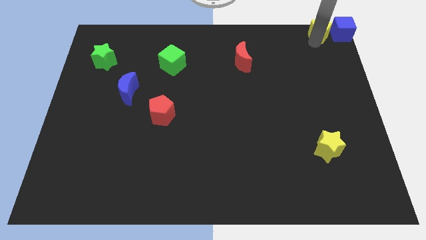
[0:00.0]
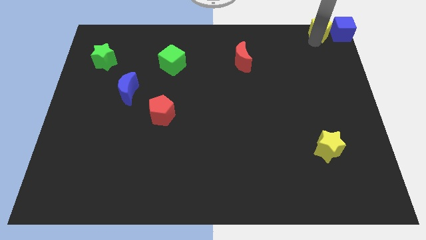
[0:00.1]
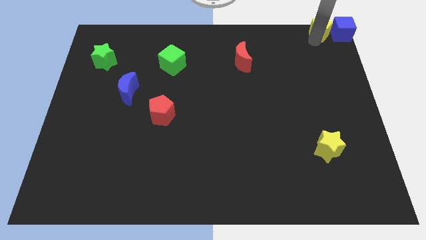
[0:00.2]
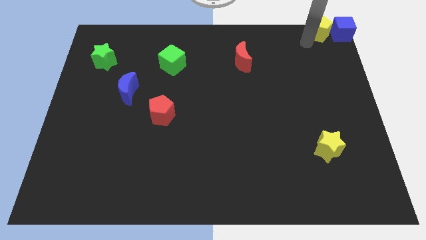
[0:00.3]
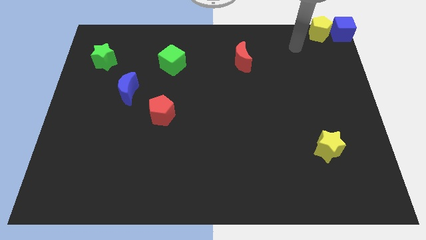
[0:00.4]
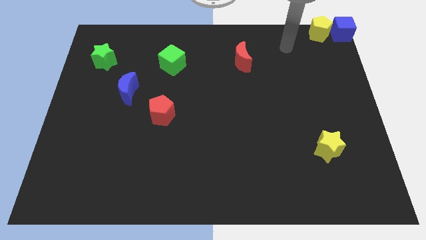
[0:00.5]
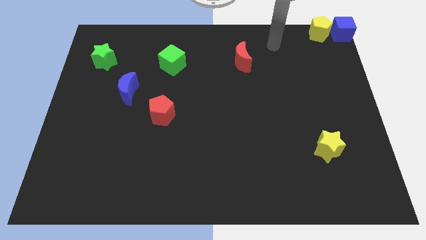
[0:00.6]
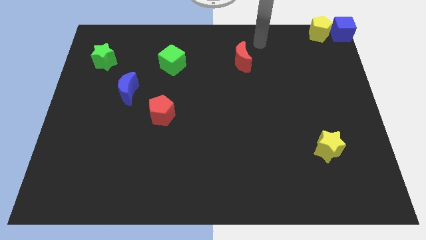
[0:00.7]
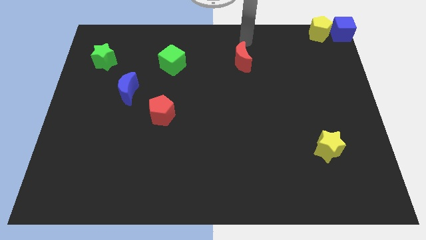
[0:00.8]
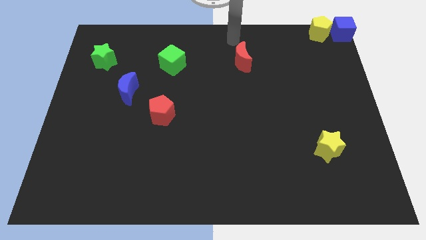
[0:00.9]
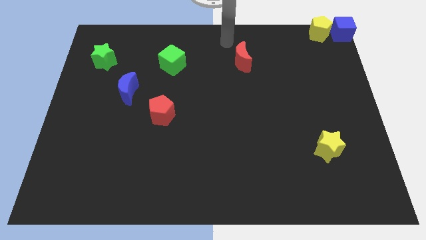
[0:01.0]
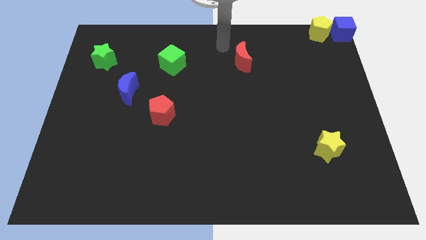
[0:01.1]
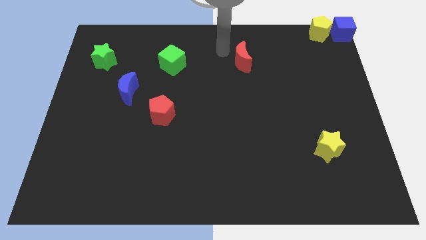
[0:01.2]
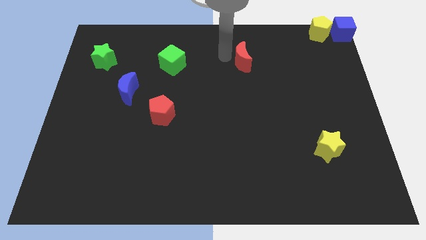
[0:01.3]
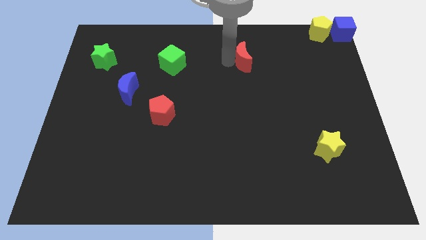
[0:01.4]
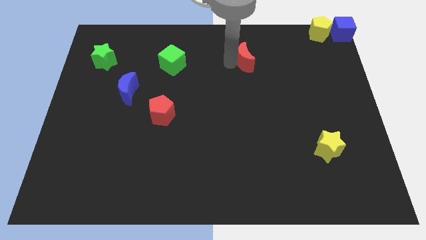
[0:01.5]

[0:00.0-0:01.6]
move your hand towards the red crescent

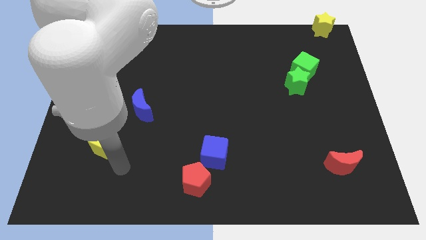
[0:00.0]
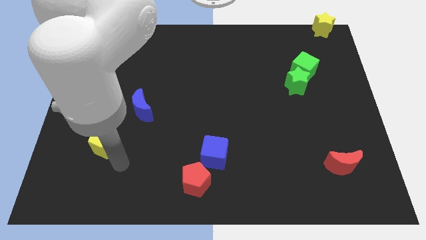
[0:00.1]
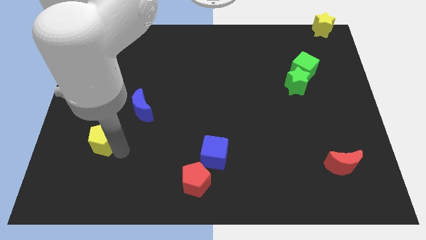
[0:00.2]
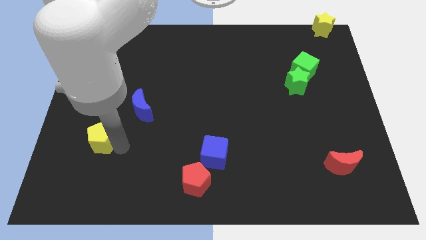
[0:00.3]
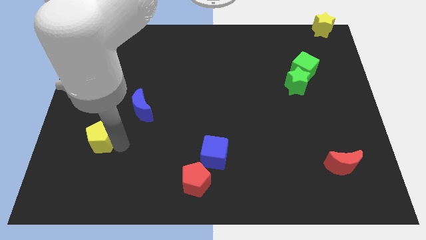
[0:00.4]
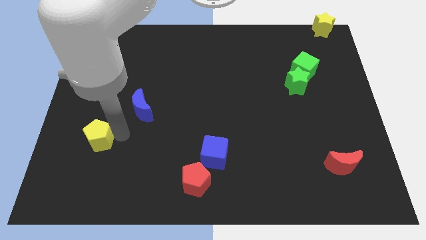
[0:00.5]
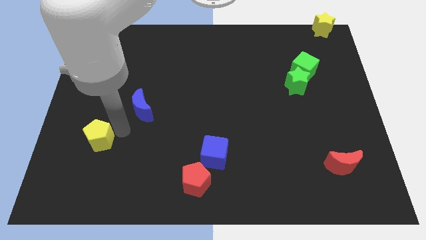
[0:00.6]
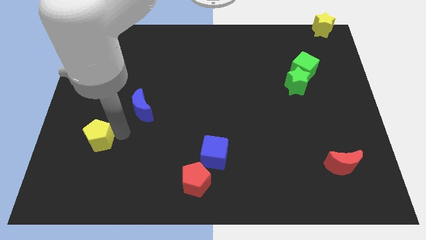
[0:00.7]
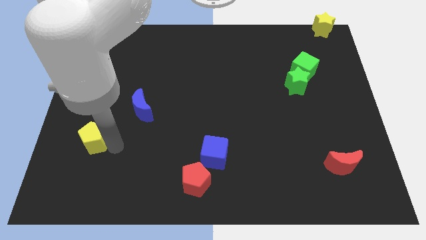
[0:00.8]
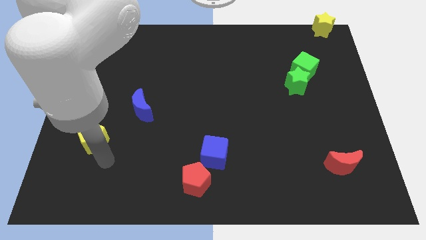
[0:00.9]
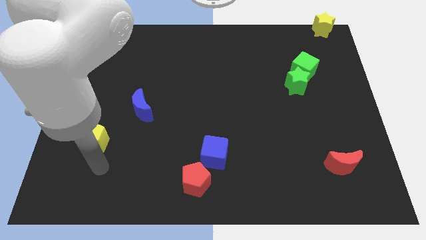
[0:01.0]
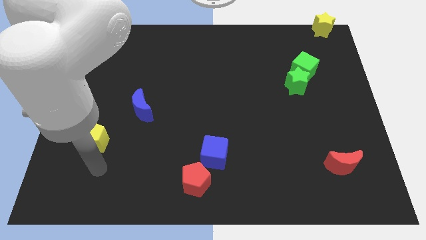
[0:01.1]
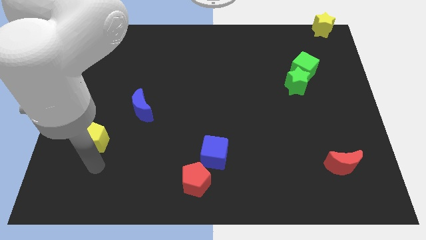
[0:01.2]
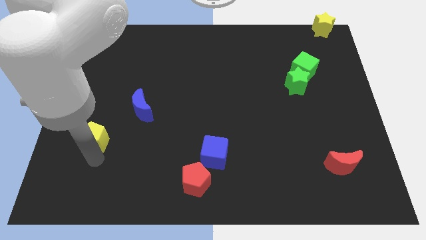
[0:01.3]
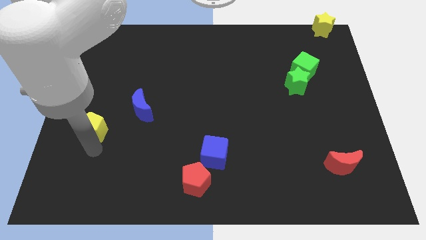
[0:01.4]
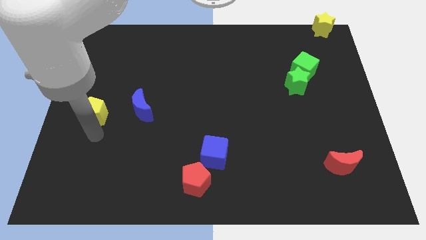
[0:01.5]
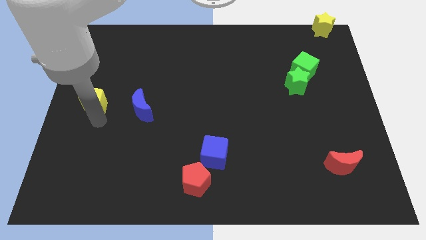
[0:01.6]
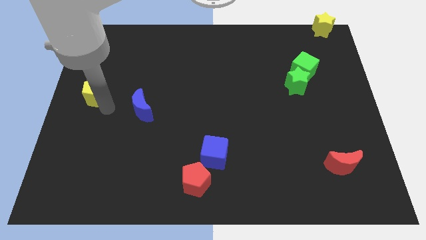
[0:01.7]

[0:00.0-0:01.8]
push the yellow pentagon left to the blue moon

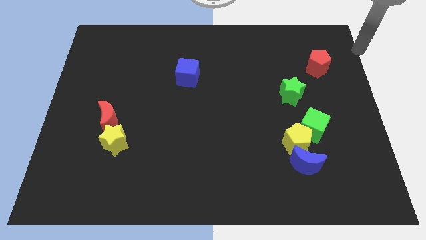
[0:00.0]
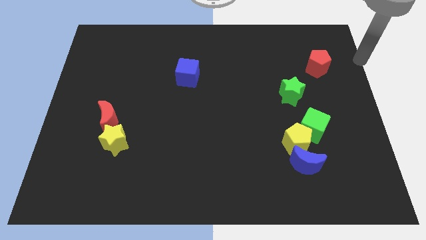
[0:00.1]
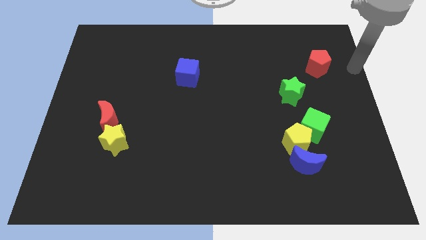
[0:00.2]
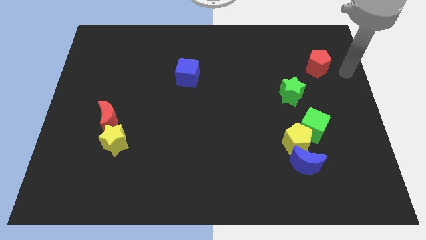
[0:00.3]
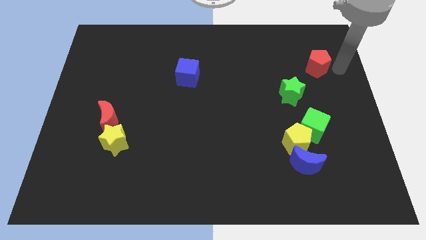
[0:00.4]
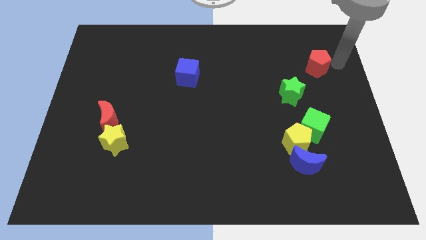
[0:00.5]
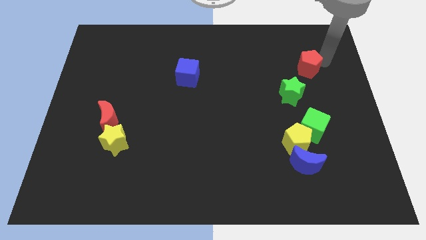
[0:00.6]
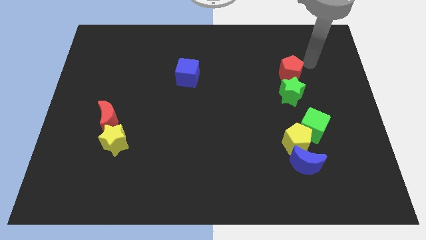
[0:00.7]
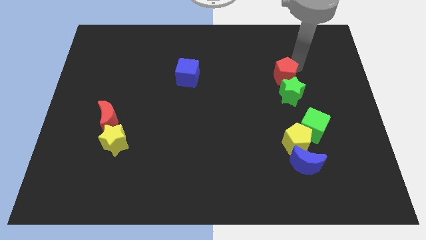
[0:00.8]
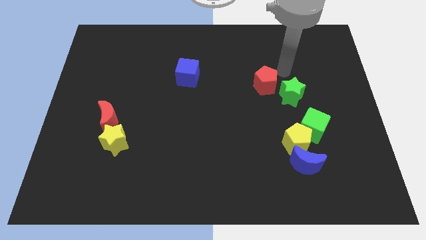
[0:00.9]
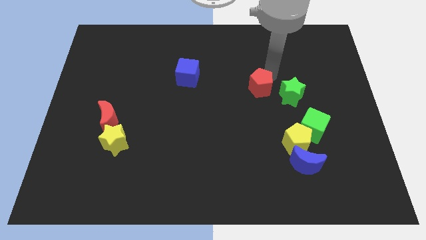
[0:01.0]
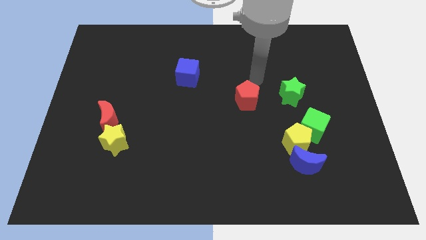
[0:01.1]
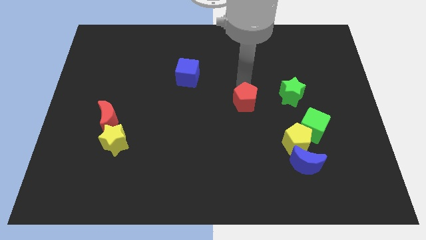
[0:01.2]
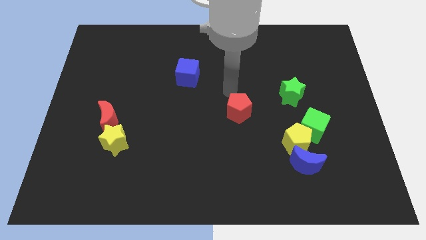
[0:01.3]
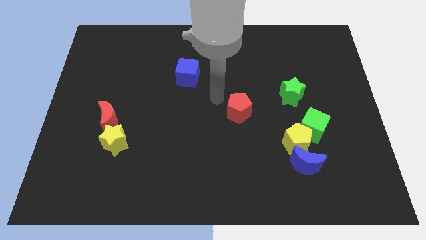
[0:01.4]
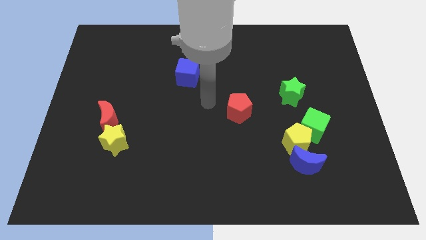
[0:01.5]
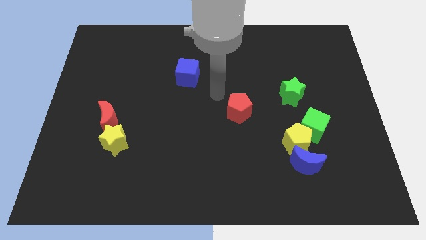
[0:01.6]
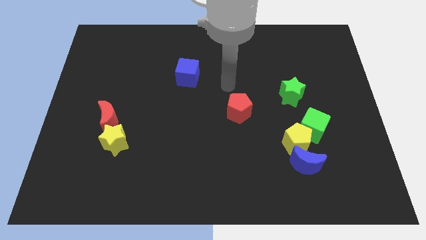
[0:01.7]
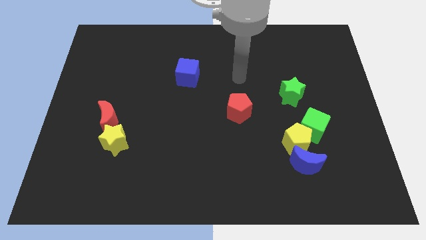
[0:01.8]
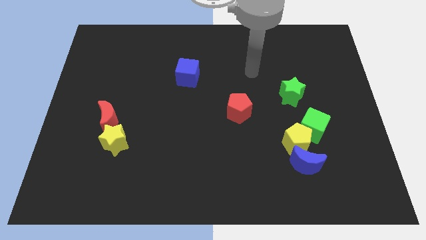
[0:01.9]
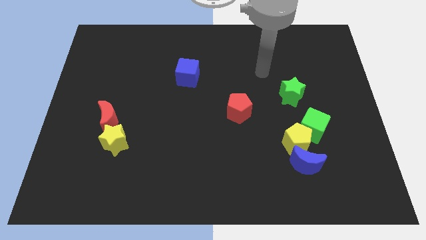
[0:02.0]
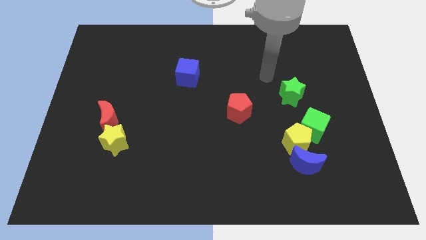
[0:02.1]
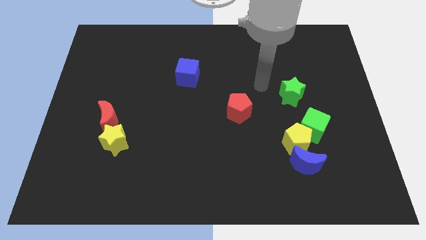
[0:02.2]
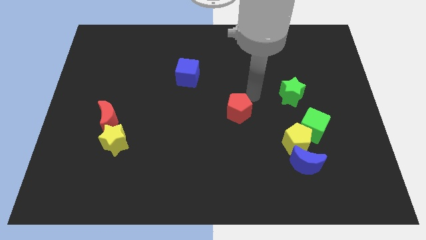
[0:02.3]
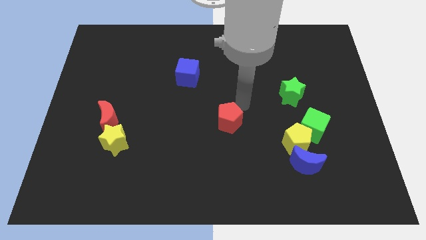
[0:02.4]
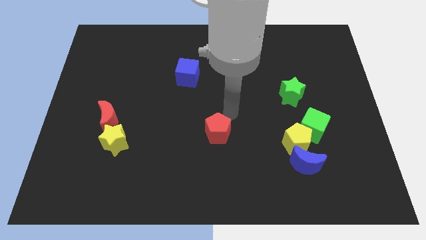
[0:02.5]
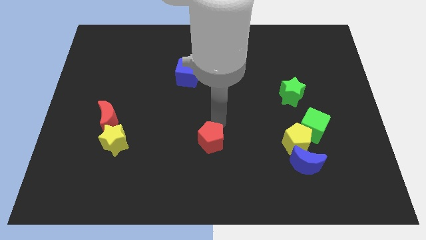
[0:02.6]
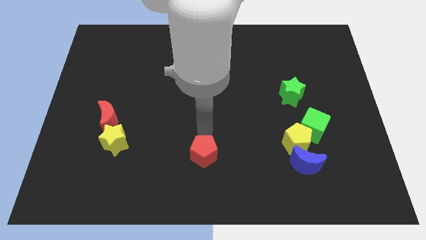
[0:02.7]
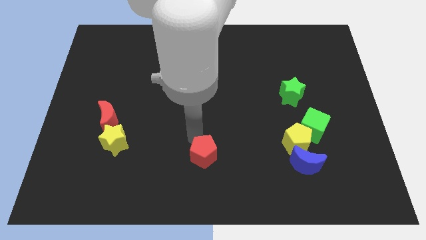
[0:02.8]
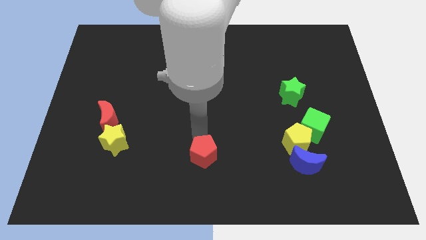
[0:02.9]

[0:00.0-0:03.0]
push the red pentagon towards the bottom center

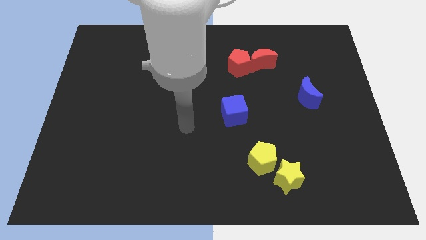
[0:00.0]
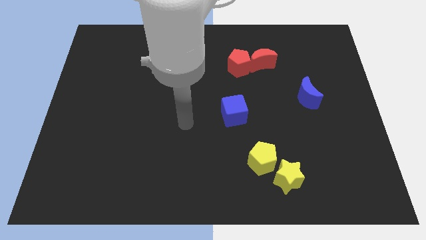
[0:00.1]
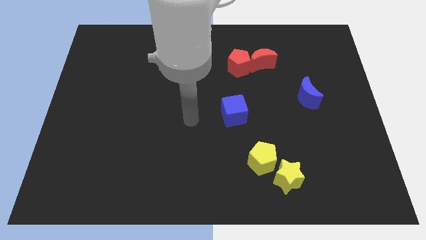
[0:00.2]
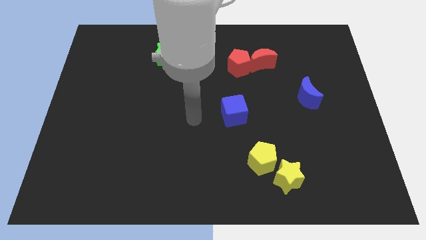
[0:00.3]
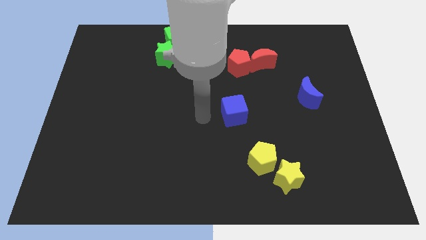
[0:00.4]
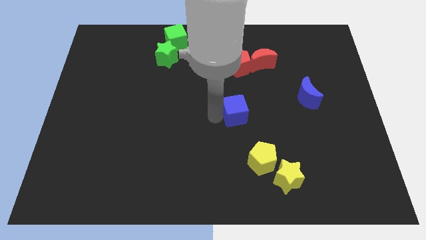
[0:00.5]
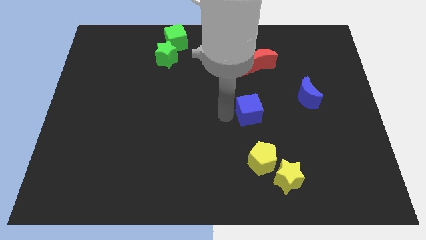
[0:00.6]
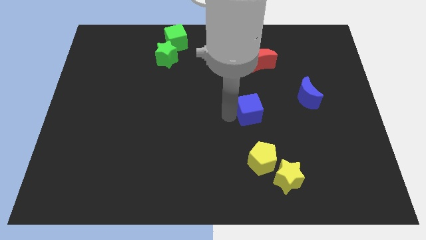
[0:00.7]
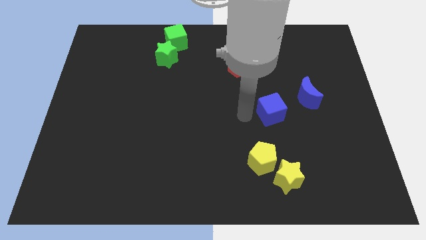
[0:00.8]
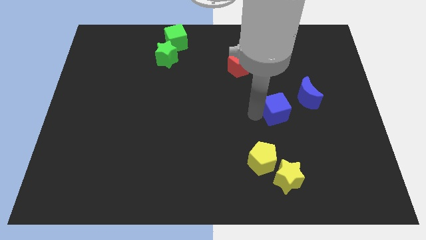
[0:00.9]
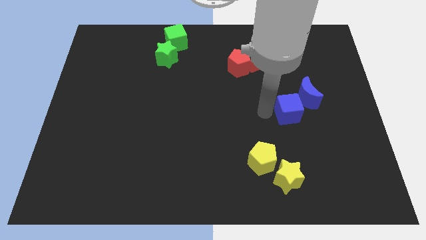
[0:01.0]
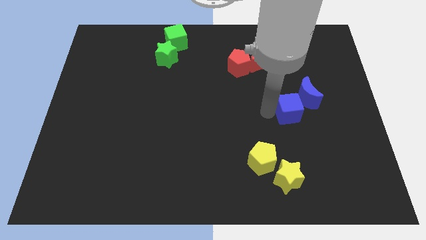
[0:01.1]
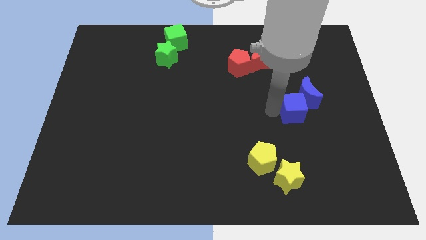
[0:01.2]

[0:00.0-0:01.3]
push the blue cube towards the left of blue moon

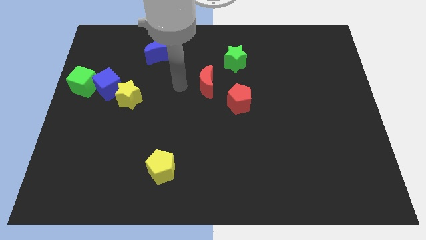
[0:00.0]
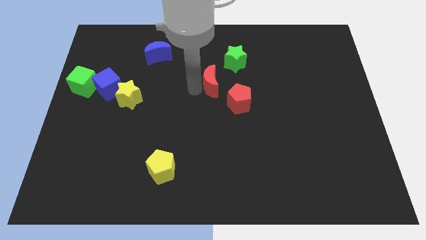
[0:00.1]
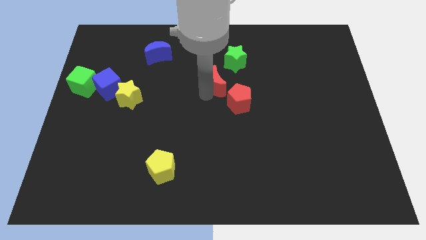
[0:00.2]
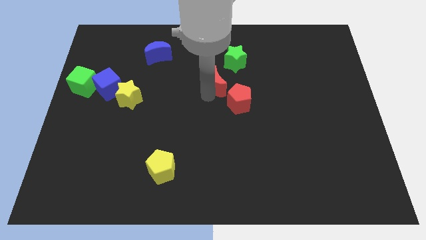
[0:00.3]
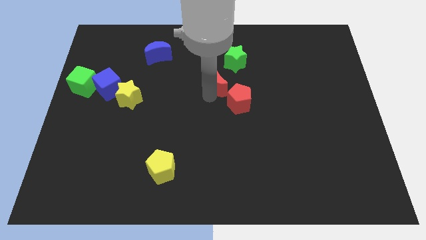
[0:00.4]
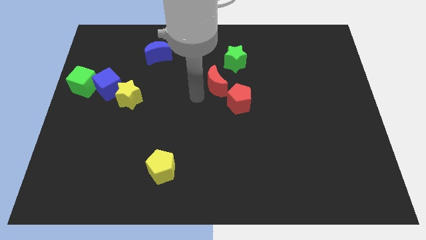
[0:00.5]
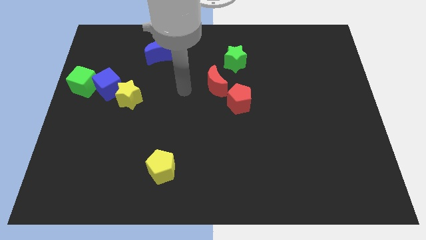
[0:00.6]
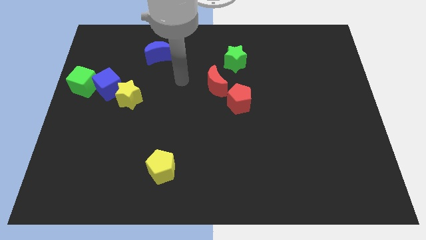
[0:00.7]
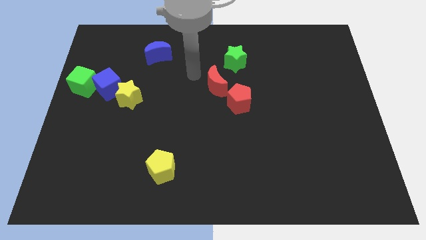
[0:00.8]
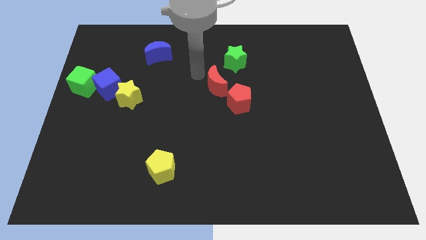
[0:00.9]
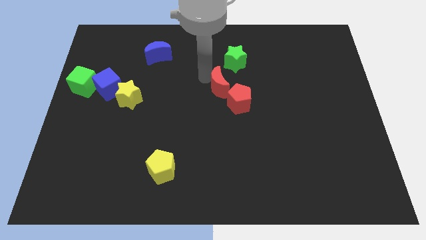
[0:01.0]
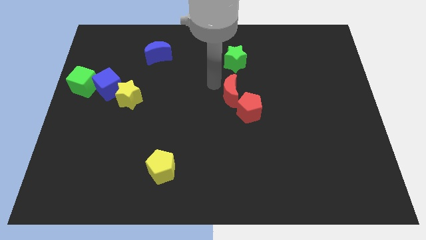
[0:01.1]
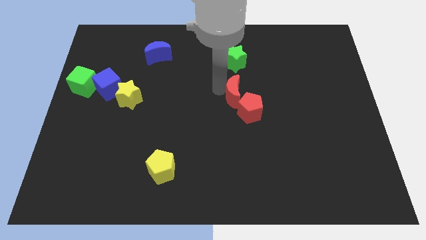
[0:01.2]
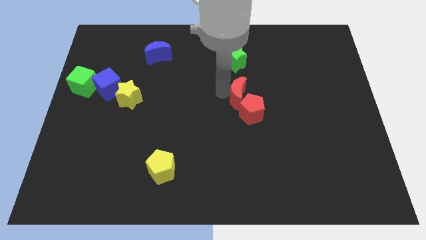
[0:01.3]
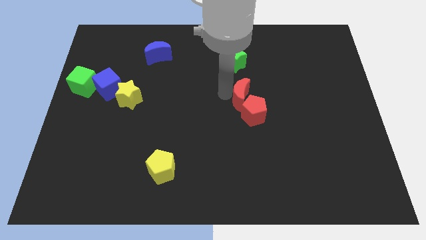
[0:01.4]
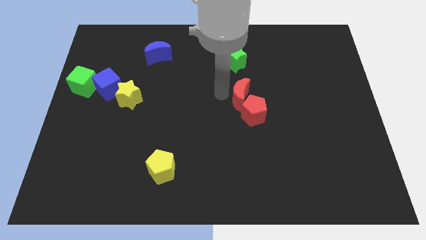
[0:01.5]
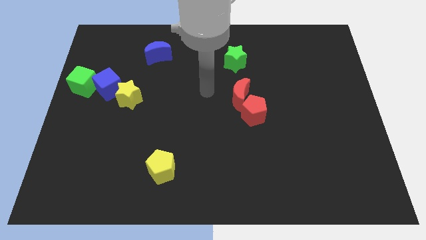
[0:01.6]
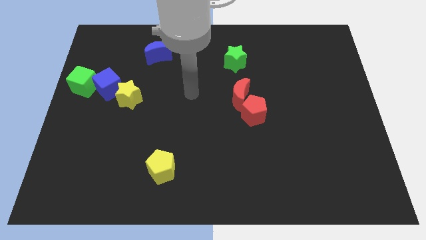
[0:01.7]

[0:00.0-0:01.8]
push the red moon into red pentagon
